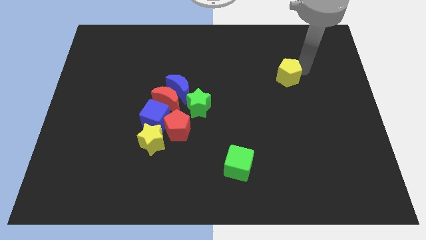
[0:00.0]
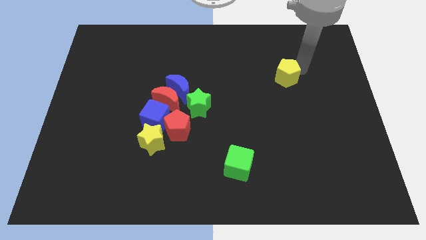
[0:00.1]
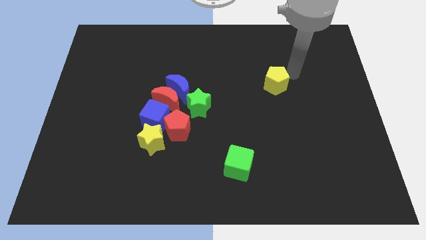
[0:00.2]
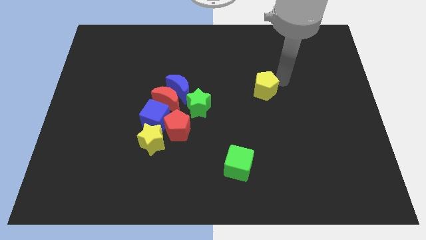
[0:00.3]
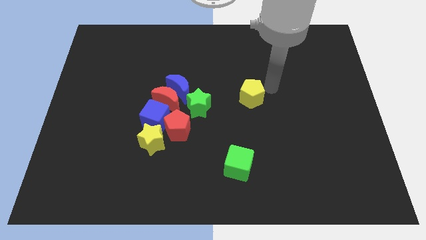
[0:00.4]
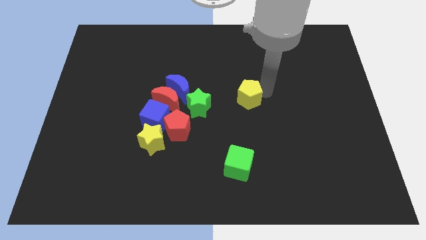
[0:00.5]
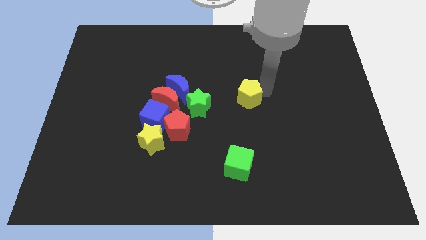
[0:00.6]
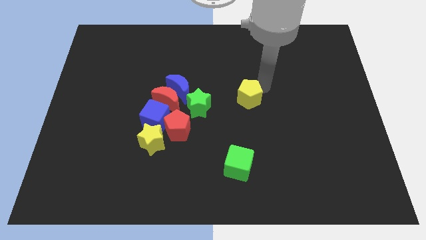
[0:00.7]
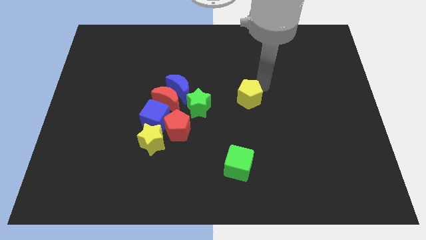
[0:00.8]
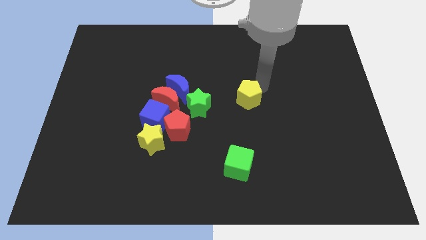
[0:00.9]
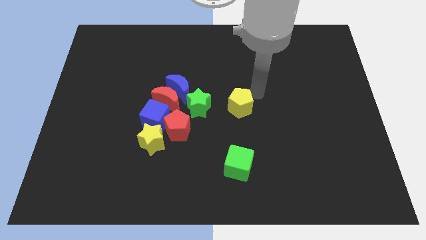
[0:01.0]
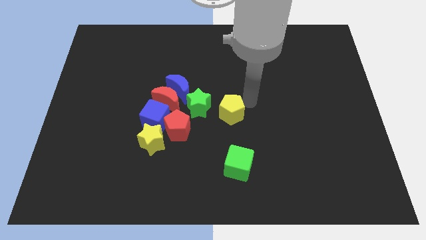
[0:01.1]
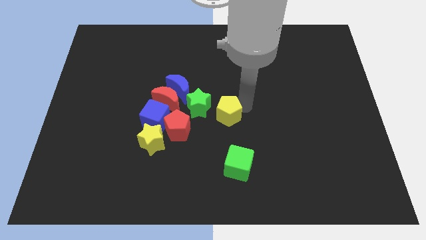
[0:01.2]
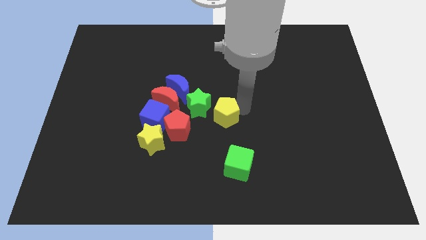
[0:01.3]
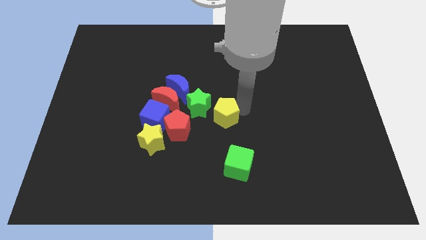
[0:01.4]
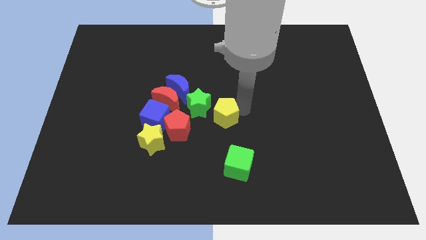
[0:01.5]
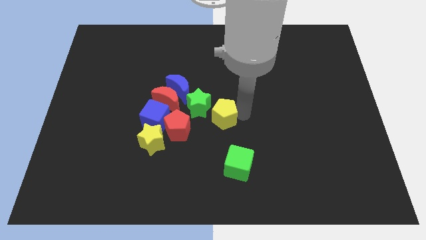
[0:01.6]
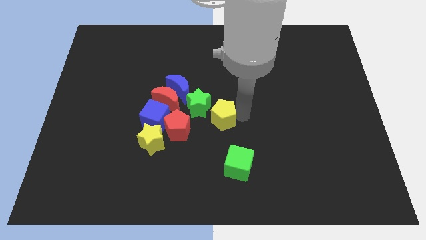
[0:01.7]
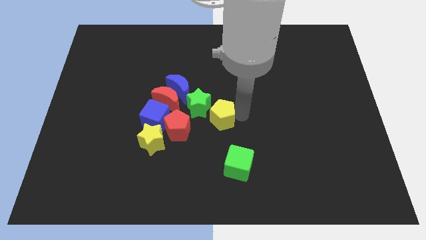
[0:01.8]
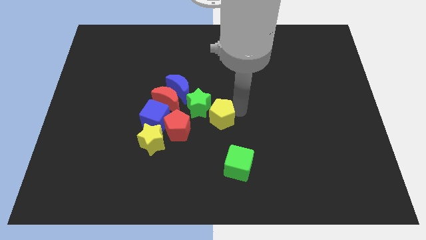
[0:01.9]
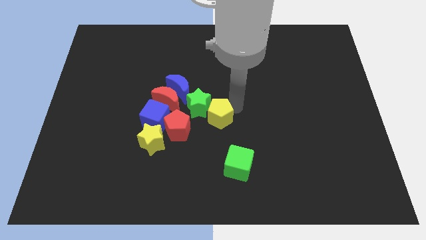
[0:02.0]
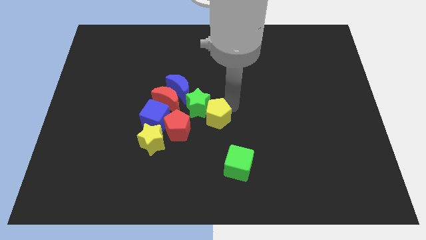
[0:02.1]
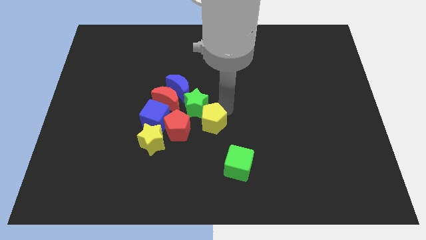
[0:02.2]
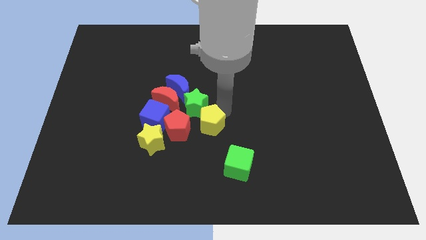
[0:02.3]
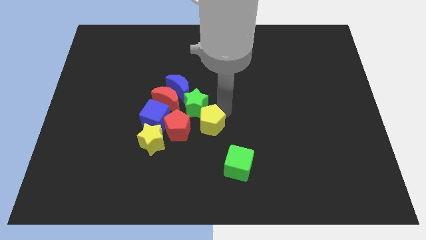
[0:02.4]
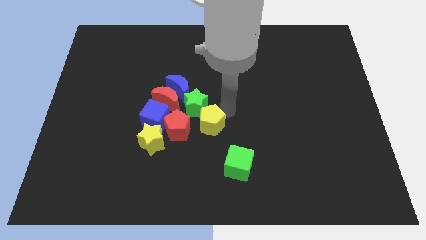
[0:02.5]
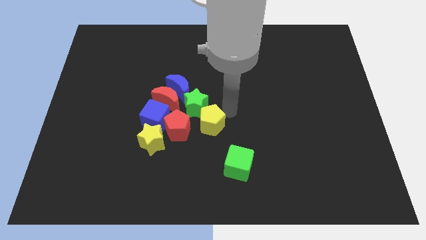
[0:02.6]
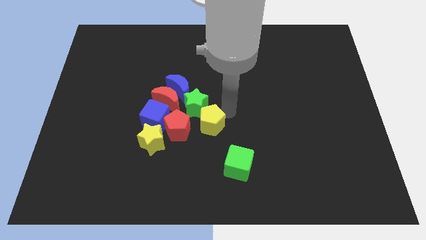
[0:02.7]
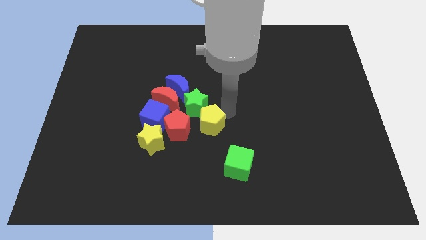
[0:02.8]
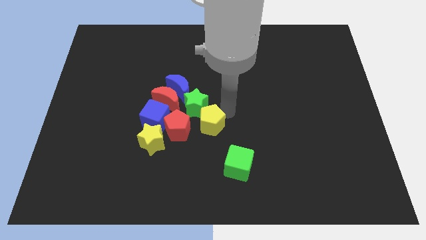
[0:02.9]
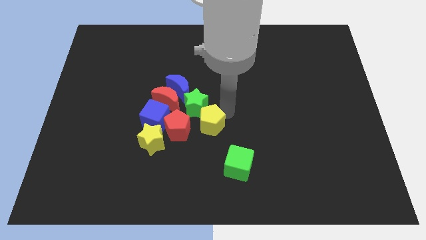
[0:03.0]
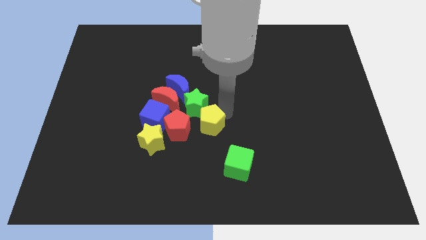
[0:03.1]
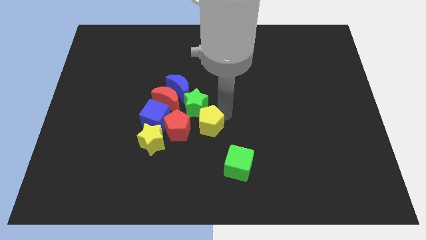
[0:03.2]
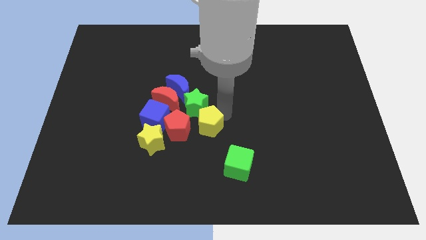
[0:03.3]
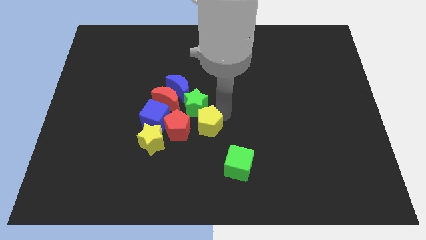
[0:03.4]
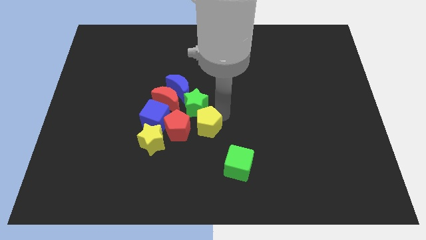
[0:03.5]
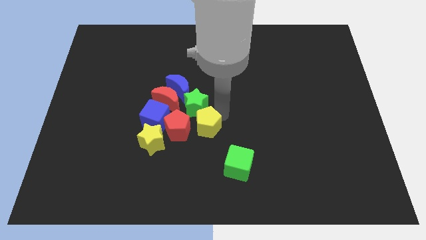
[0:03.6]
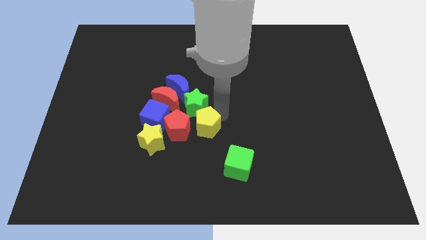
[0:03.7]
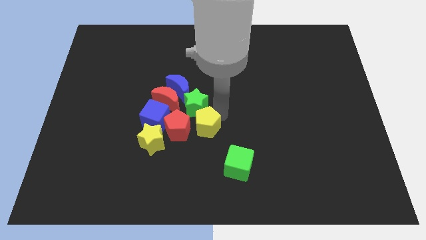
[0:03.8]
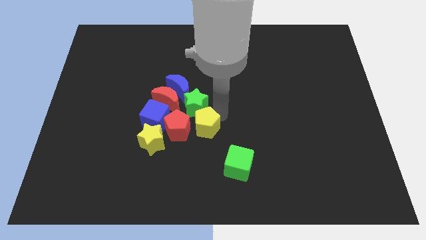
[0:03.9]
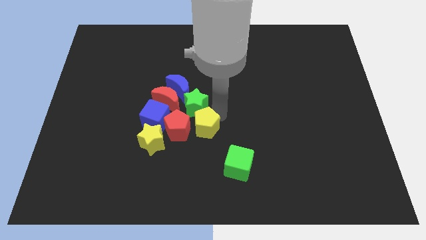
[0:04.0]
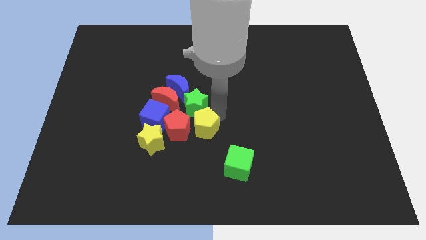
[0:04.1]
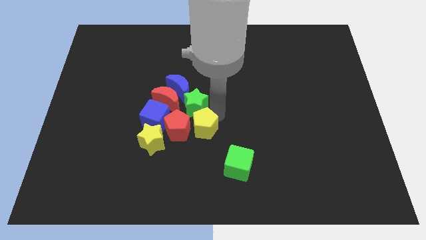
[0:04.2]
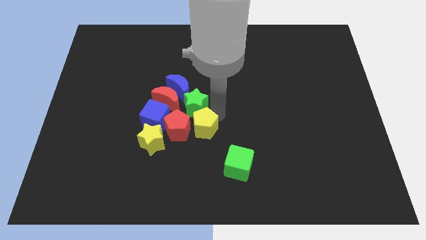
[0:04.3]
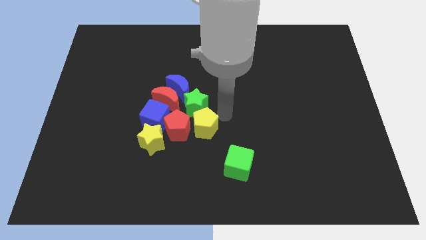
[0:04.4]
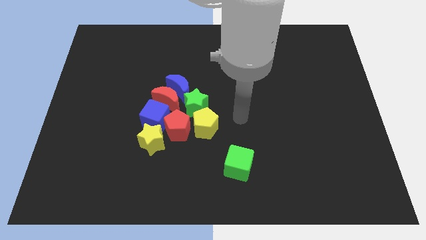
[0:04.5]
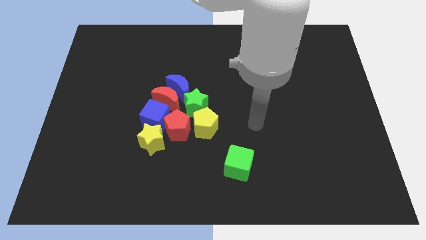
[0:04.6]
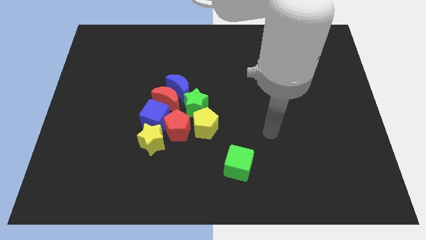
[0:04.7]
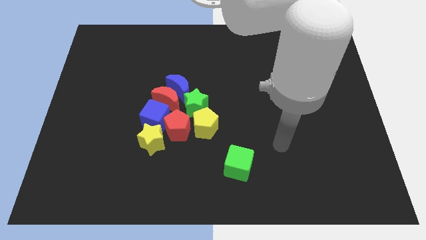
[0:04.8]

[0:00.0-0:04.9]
push the yellow pentagon towards the right side of the red pentagon

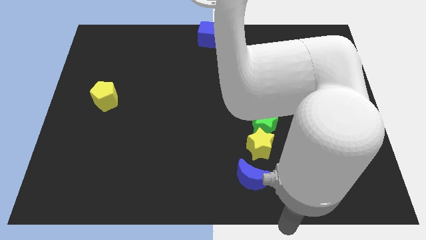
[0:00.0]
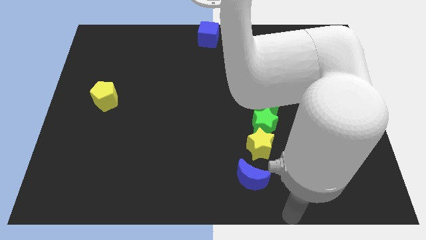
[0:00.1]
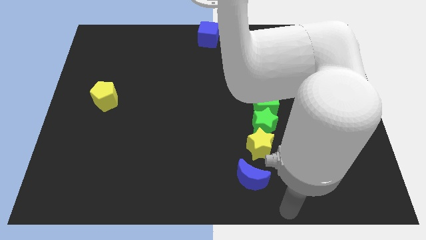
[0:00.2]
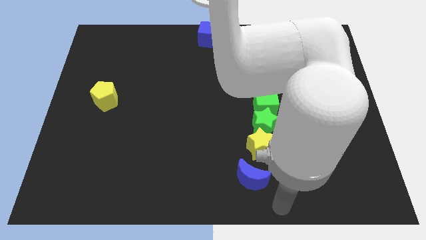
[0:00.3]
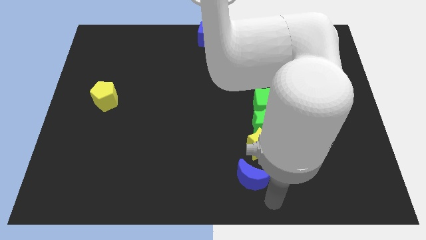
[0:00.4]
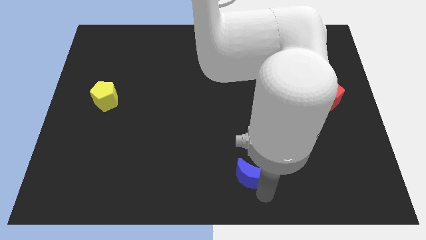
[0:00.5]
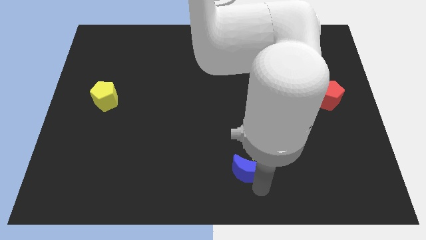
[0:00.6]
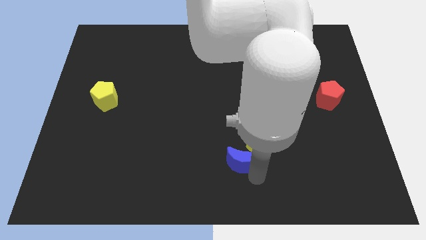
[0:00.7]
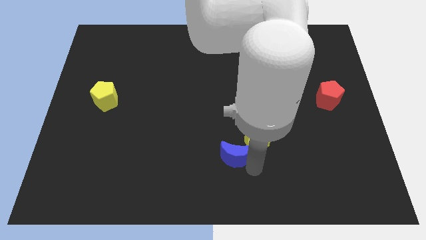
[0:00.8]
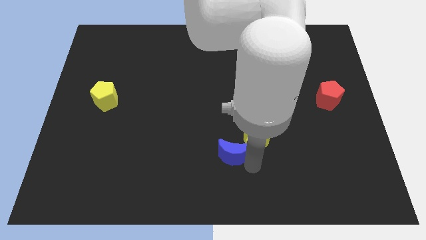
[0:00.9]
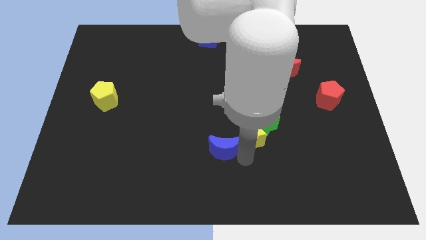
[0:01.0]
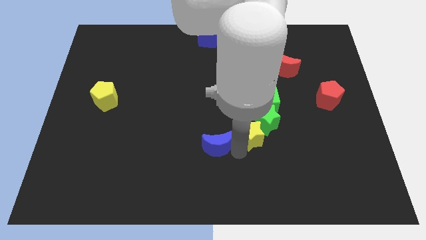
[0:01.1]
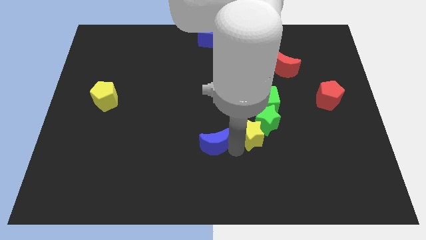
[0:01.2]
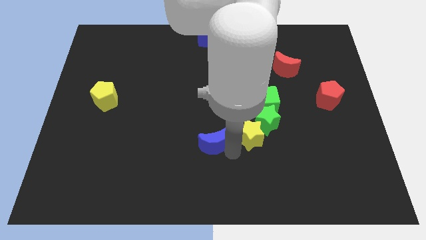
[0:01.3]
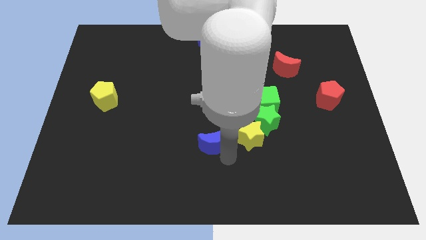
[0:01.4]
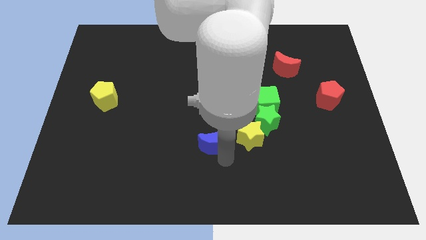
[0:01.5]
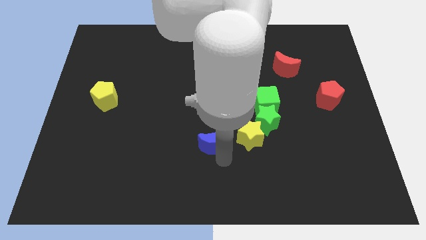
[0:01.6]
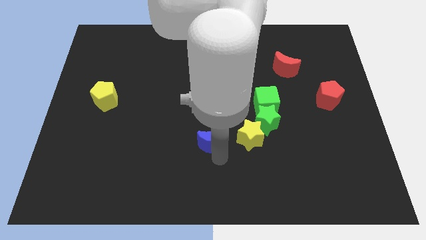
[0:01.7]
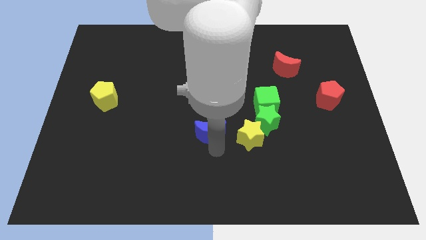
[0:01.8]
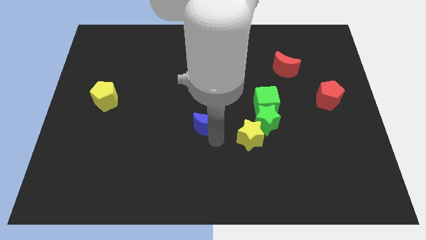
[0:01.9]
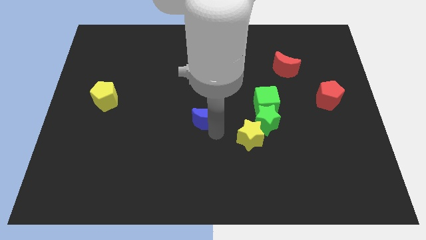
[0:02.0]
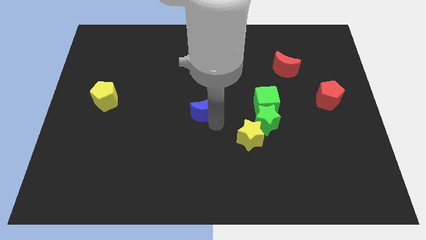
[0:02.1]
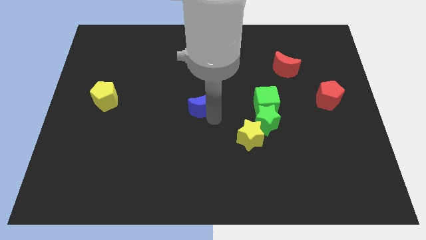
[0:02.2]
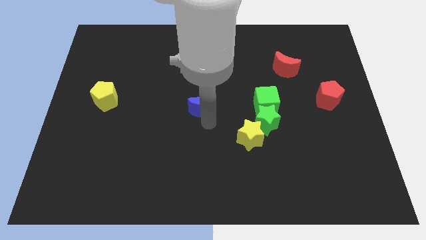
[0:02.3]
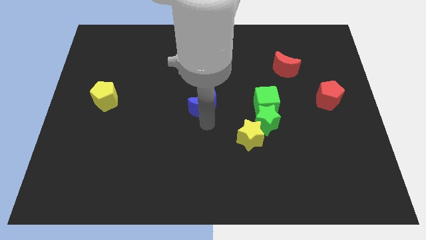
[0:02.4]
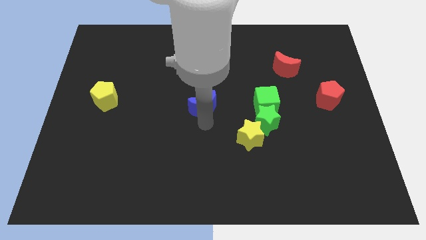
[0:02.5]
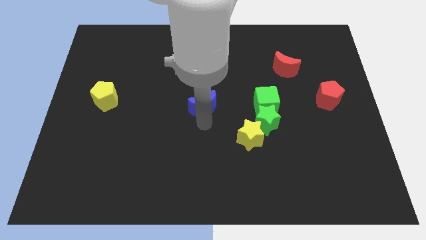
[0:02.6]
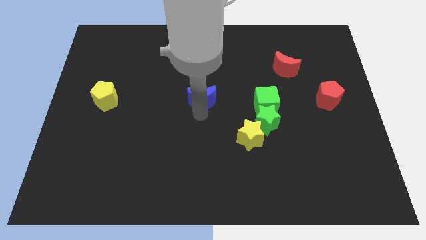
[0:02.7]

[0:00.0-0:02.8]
move the blue moon between yellow pentagon and green cube

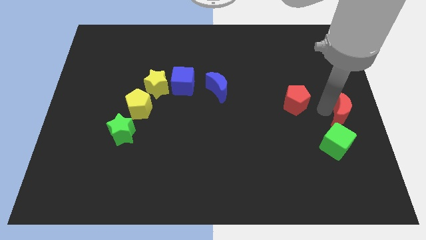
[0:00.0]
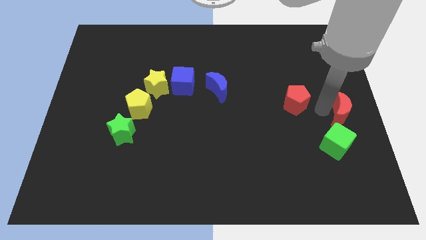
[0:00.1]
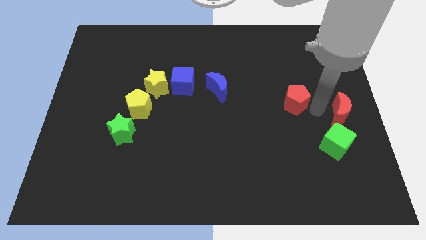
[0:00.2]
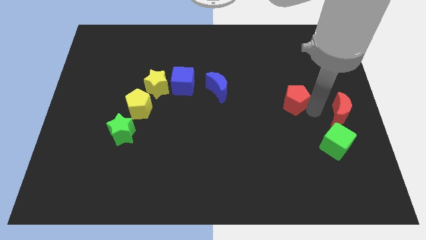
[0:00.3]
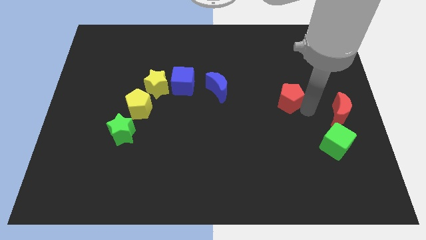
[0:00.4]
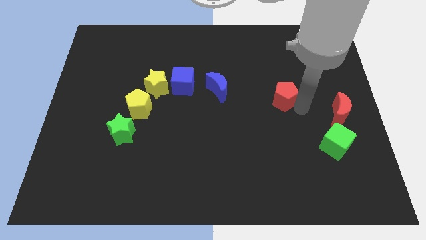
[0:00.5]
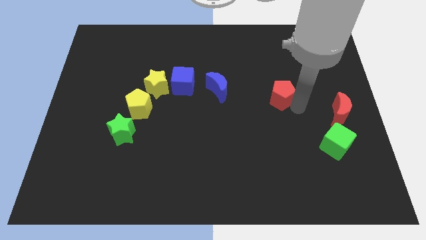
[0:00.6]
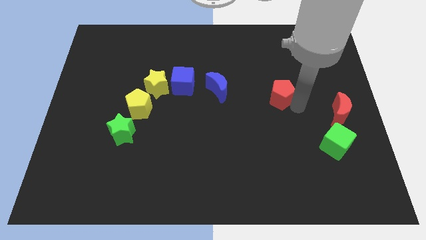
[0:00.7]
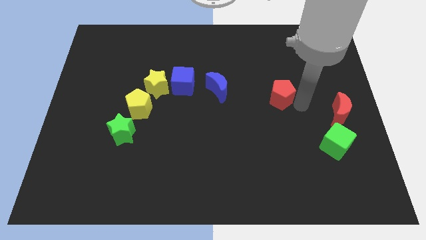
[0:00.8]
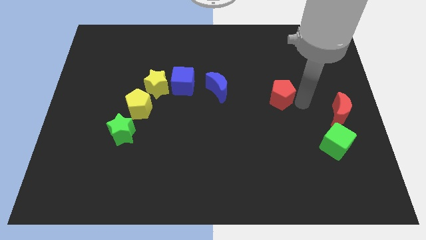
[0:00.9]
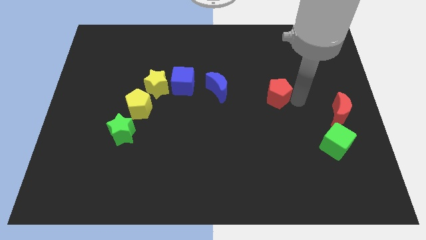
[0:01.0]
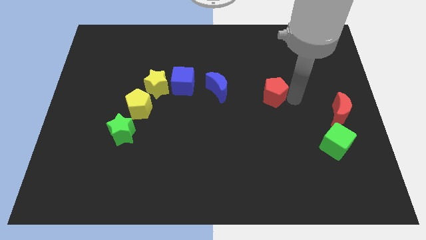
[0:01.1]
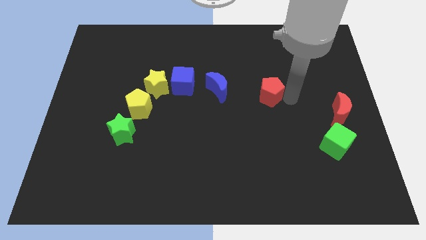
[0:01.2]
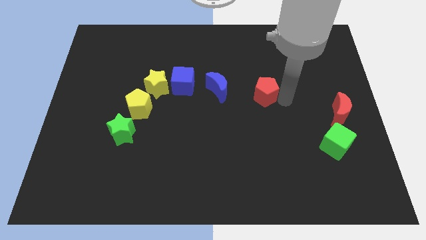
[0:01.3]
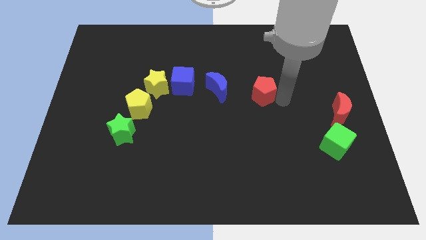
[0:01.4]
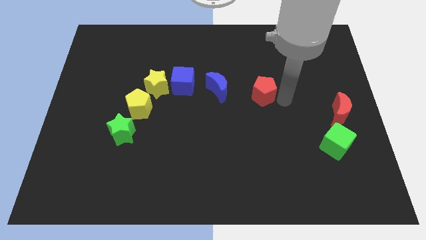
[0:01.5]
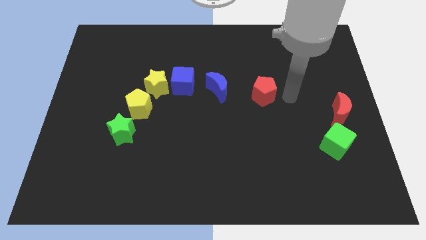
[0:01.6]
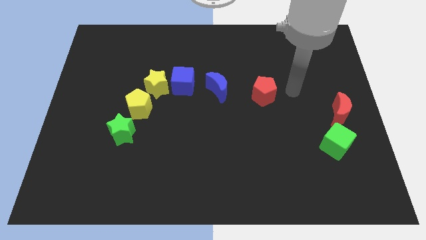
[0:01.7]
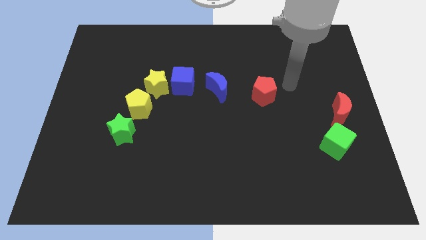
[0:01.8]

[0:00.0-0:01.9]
move the red pentagon towards blue crescent
